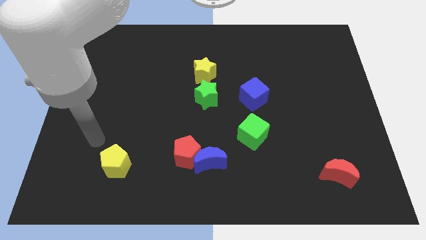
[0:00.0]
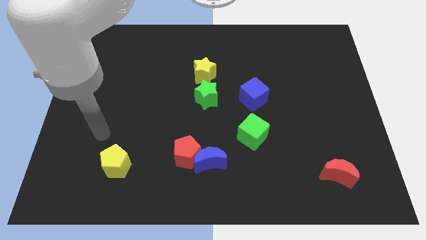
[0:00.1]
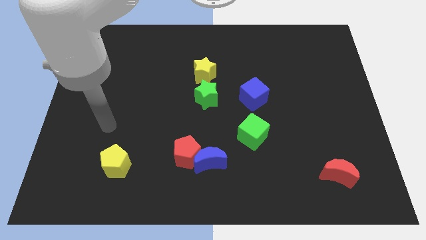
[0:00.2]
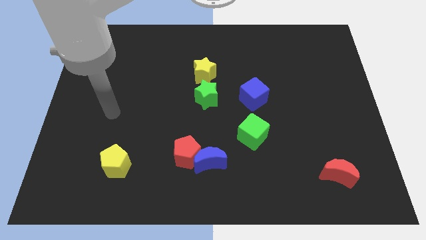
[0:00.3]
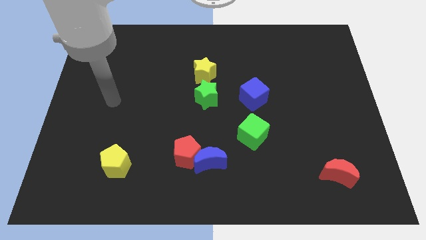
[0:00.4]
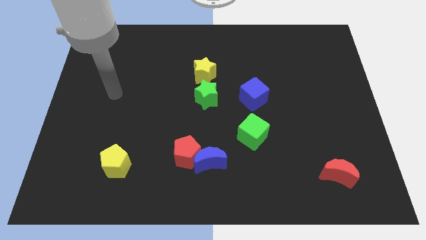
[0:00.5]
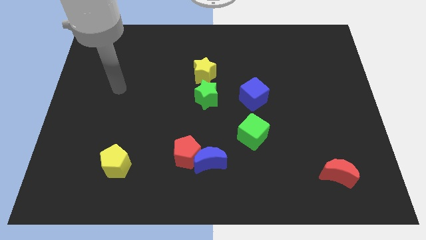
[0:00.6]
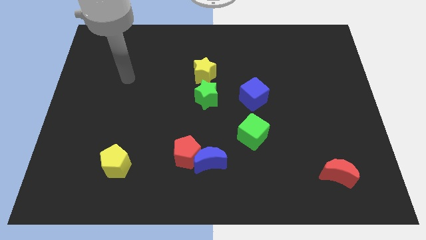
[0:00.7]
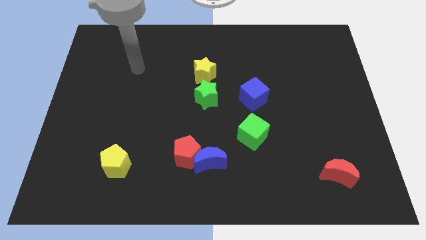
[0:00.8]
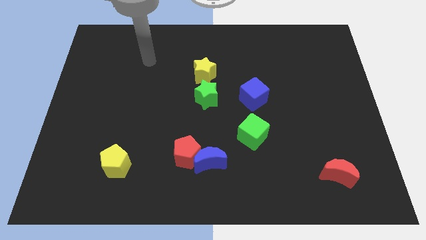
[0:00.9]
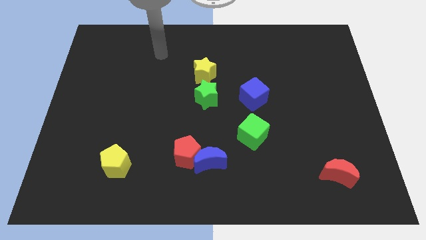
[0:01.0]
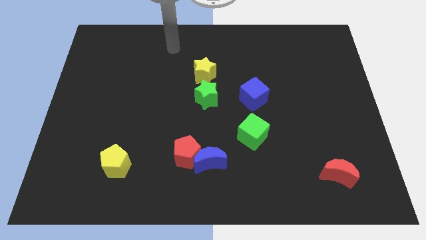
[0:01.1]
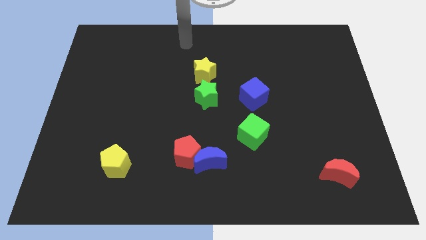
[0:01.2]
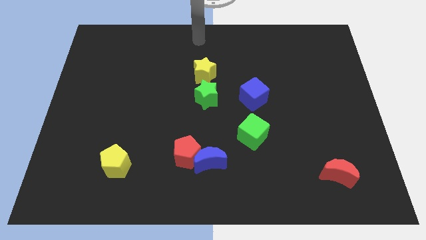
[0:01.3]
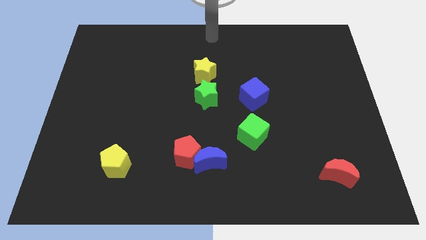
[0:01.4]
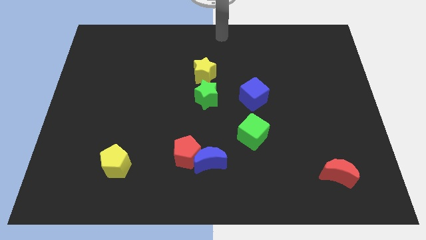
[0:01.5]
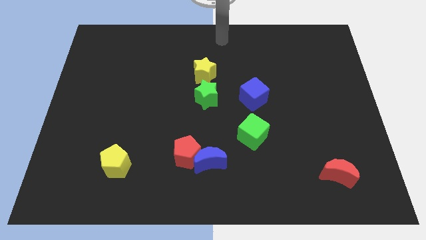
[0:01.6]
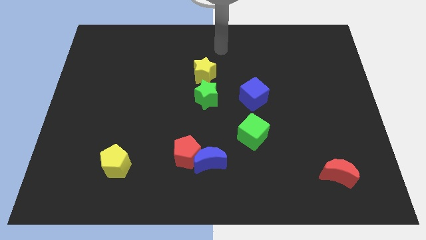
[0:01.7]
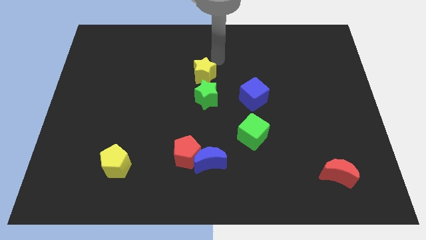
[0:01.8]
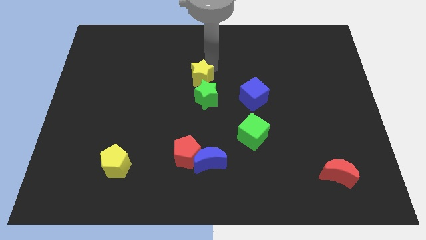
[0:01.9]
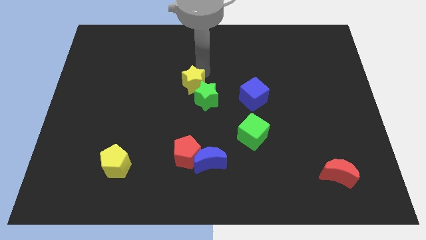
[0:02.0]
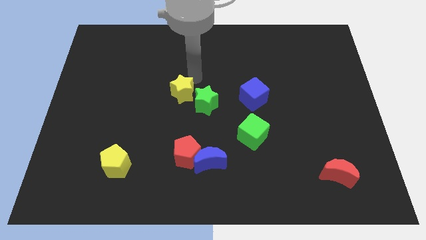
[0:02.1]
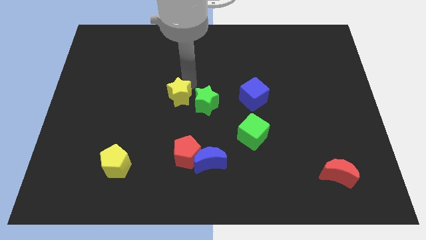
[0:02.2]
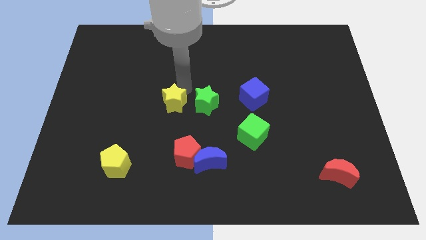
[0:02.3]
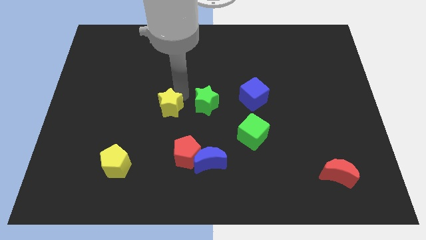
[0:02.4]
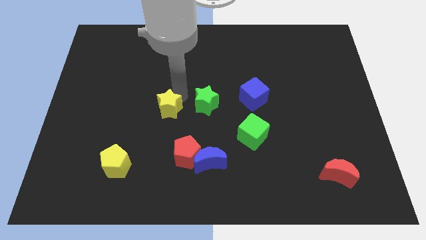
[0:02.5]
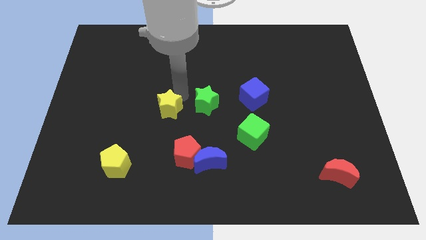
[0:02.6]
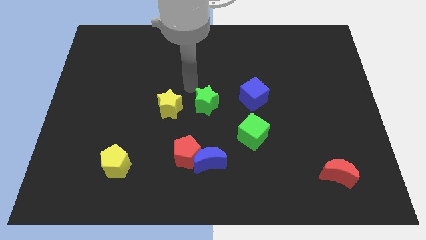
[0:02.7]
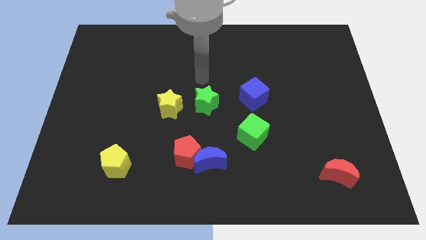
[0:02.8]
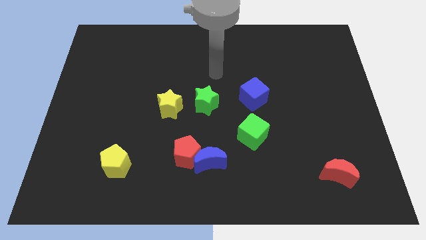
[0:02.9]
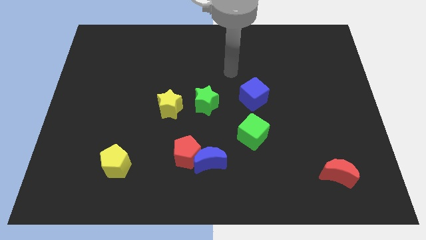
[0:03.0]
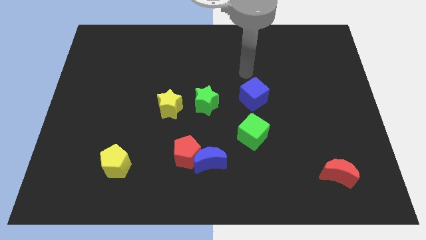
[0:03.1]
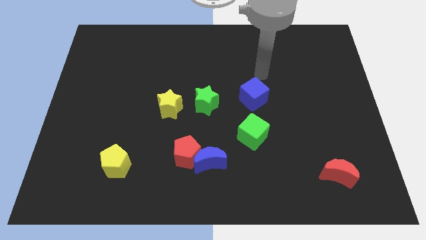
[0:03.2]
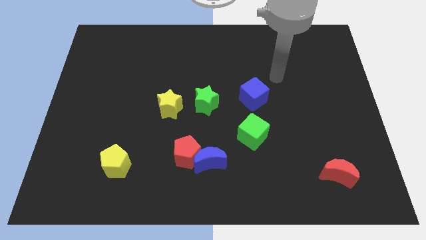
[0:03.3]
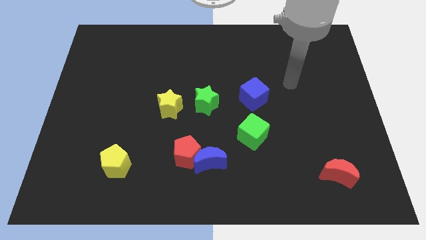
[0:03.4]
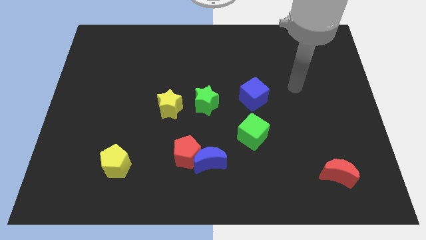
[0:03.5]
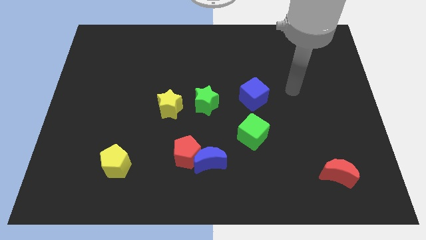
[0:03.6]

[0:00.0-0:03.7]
move the yellow star to the left of the green star

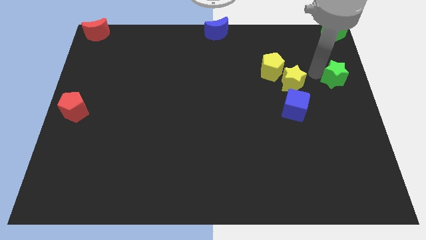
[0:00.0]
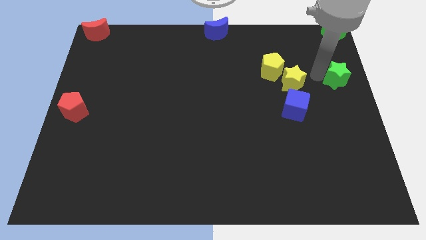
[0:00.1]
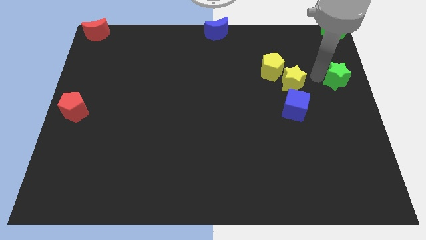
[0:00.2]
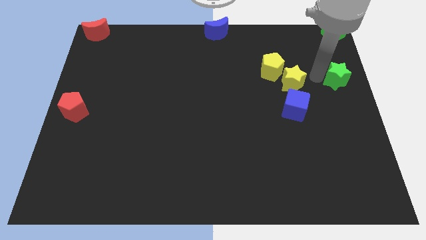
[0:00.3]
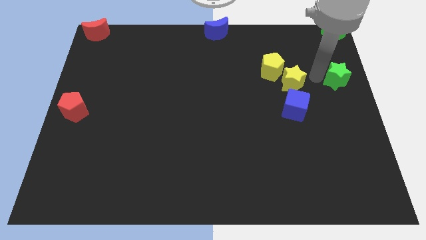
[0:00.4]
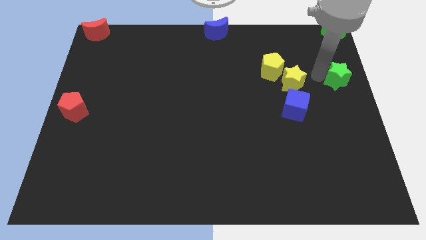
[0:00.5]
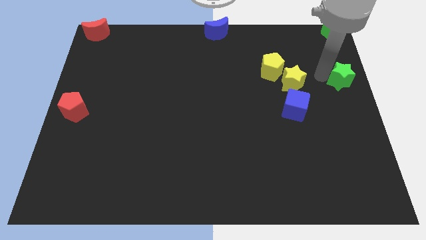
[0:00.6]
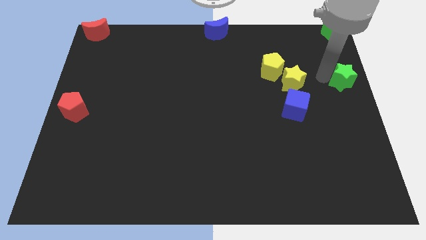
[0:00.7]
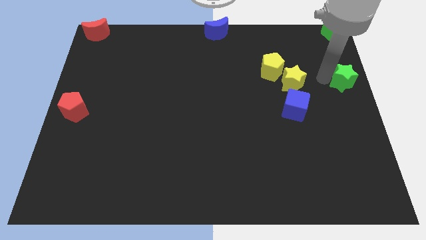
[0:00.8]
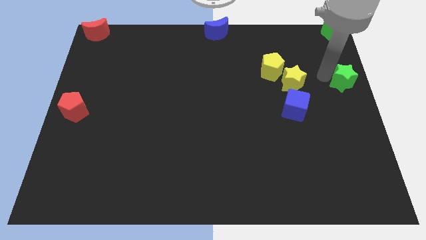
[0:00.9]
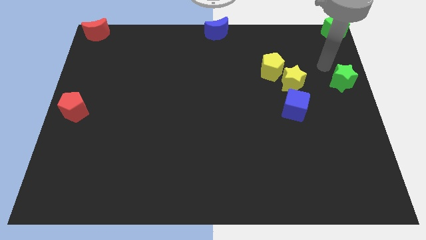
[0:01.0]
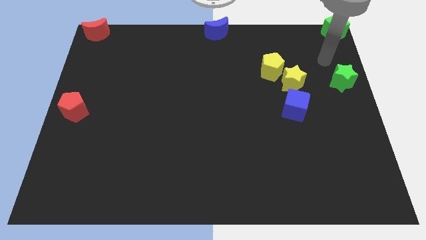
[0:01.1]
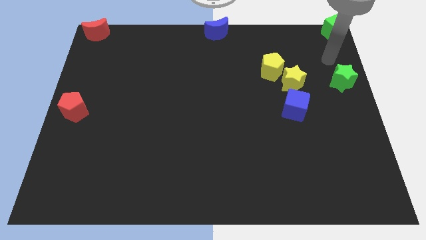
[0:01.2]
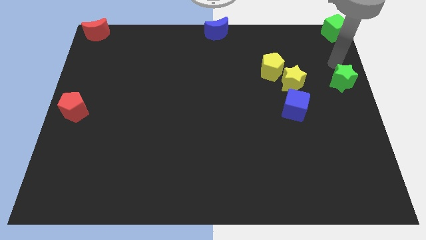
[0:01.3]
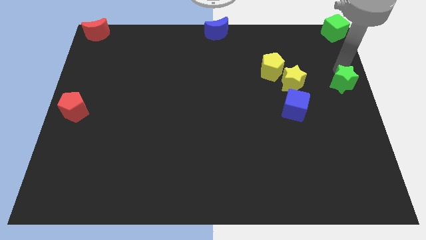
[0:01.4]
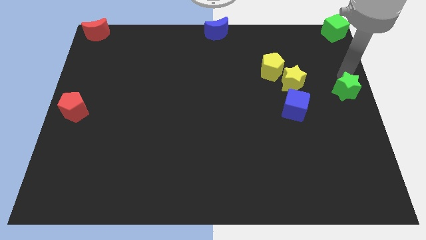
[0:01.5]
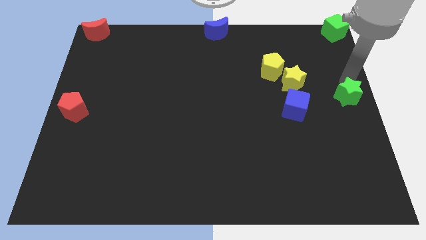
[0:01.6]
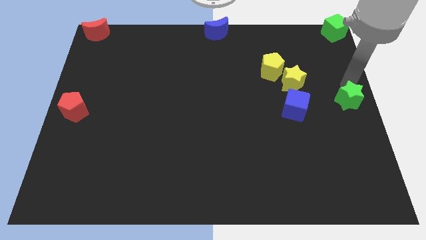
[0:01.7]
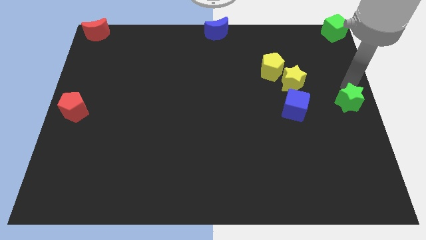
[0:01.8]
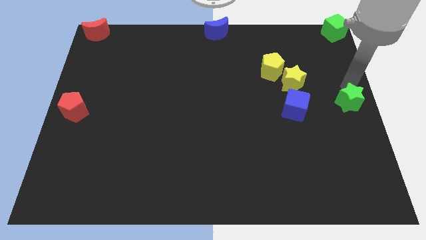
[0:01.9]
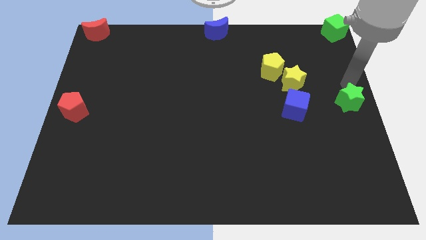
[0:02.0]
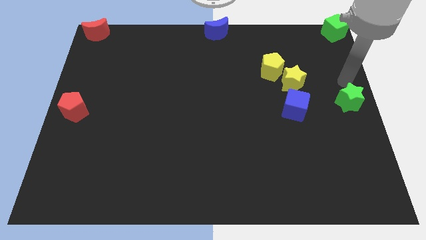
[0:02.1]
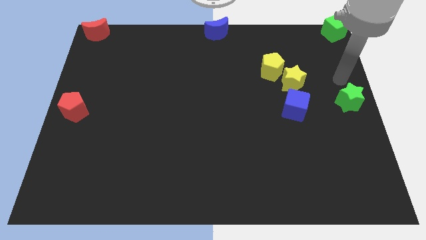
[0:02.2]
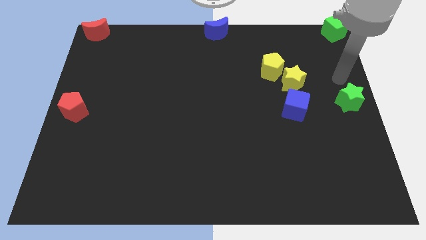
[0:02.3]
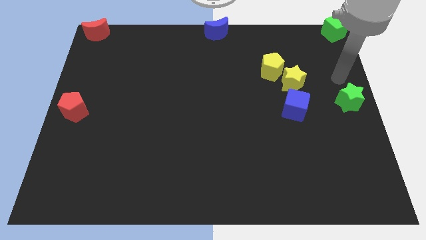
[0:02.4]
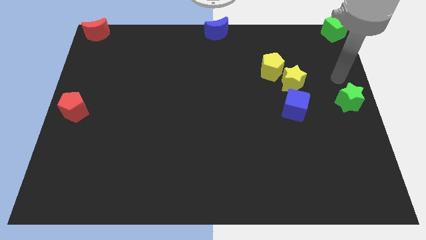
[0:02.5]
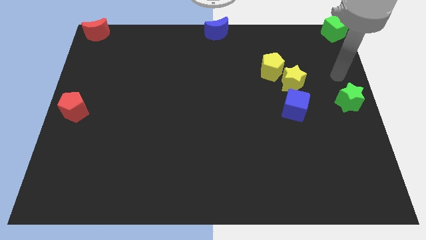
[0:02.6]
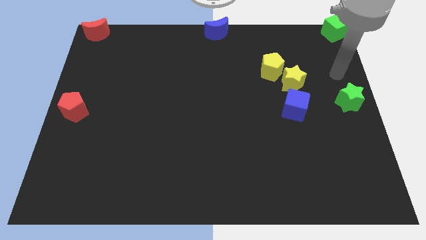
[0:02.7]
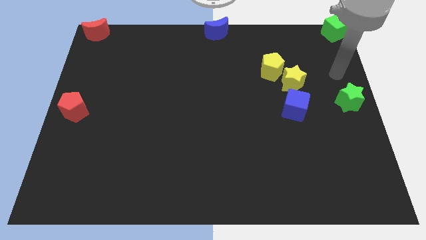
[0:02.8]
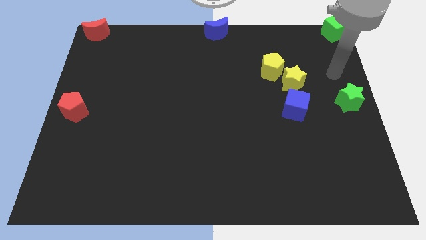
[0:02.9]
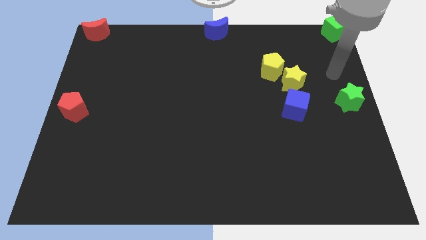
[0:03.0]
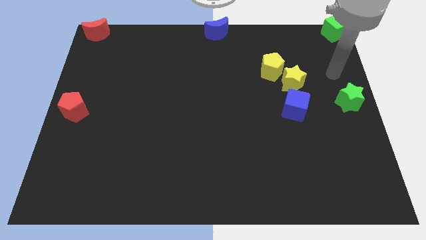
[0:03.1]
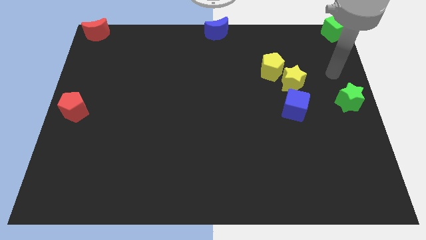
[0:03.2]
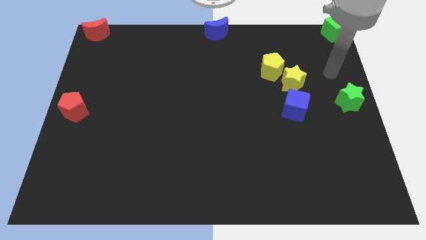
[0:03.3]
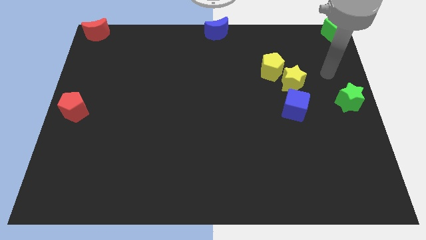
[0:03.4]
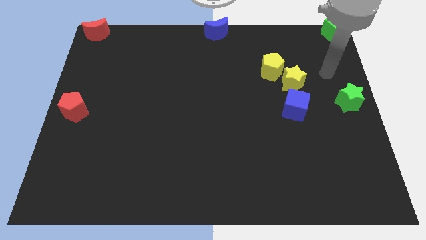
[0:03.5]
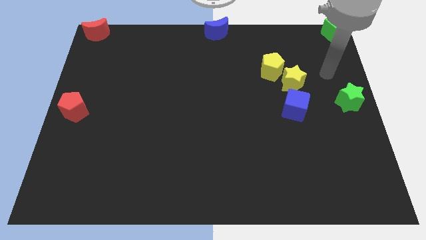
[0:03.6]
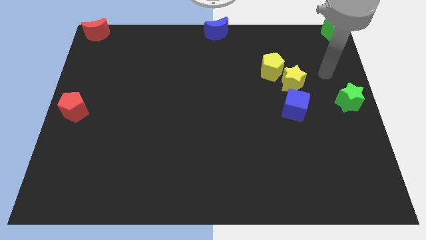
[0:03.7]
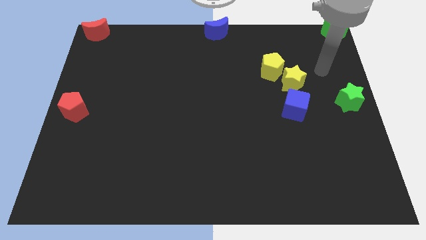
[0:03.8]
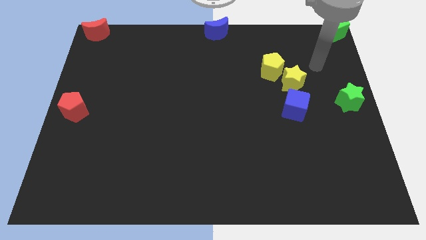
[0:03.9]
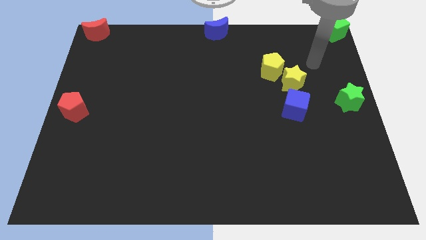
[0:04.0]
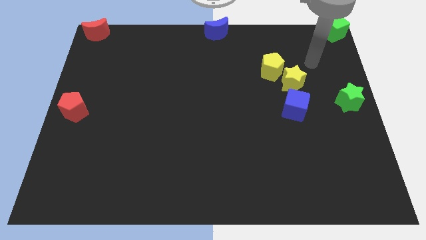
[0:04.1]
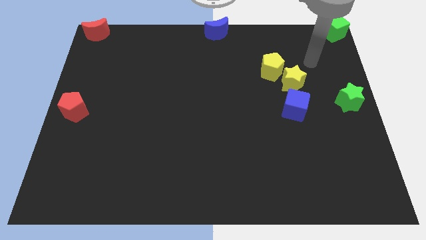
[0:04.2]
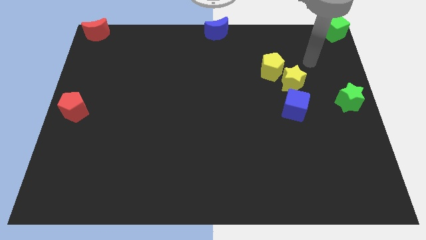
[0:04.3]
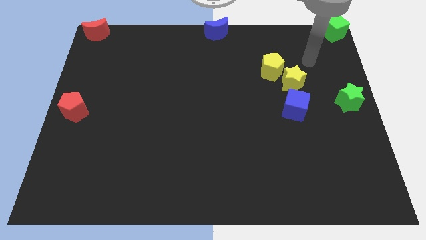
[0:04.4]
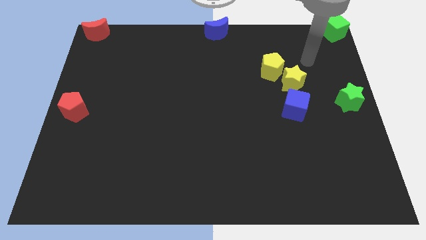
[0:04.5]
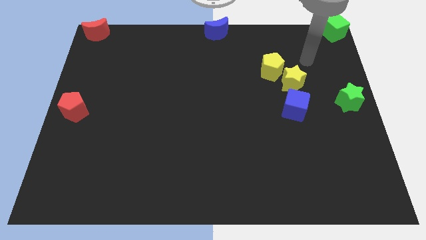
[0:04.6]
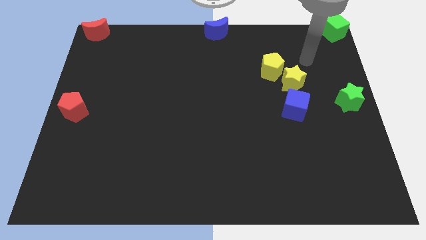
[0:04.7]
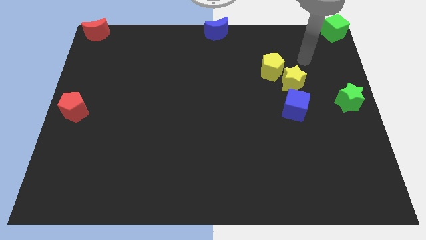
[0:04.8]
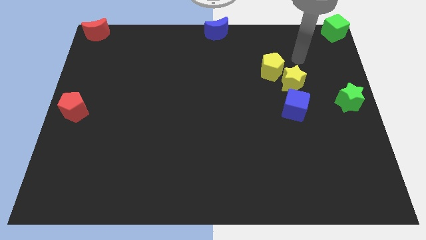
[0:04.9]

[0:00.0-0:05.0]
move the green star to the center right

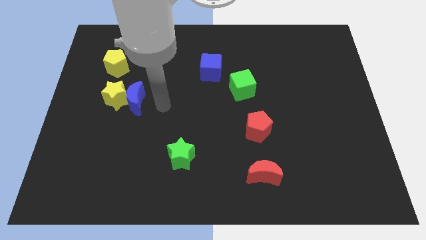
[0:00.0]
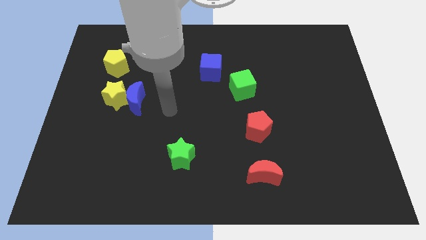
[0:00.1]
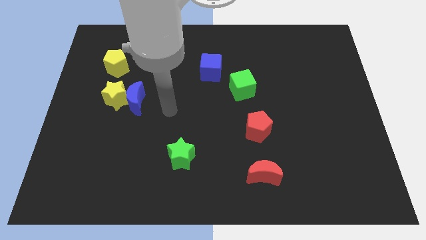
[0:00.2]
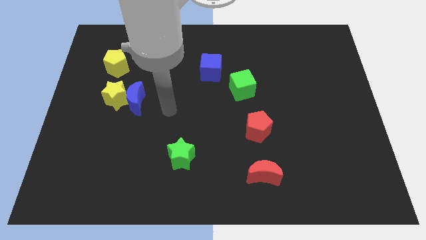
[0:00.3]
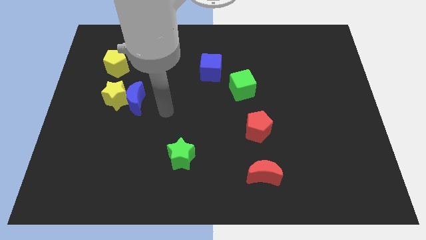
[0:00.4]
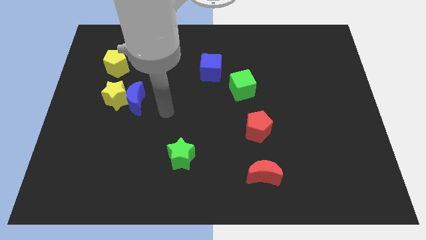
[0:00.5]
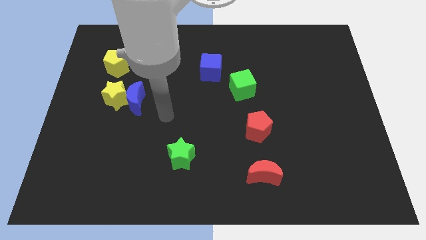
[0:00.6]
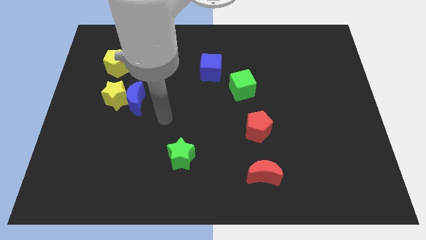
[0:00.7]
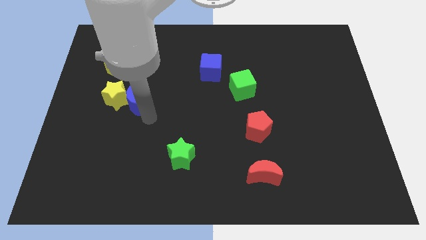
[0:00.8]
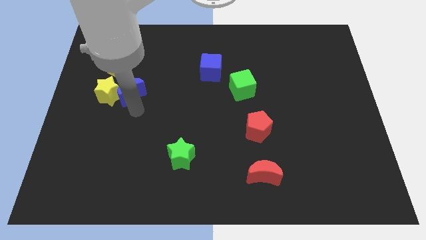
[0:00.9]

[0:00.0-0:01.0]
place arm below blue crescent
